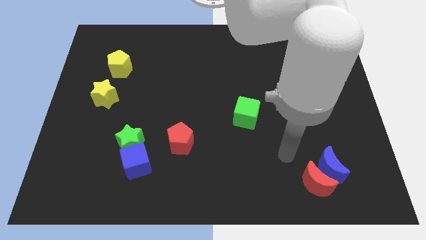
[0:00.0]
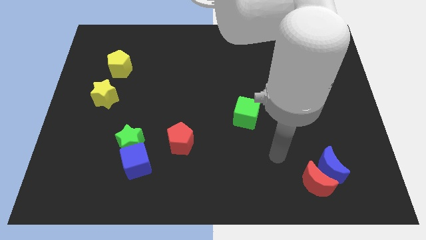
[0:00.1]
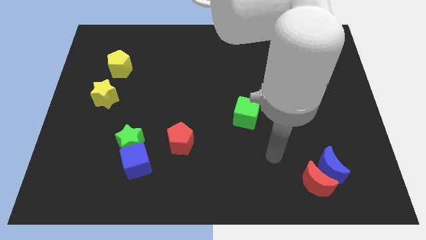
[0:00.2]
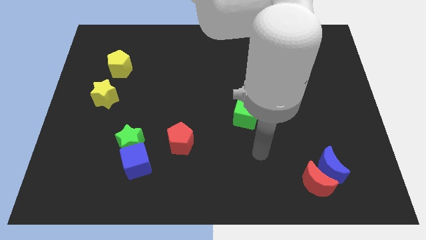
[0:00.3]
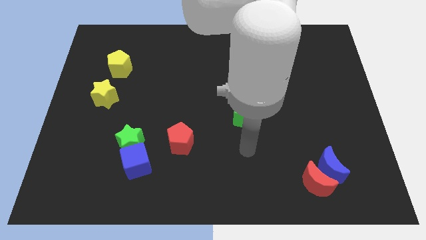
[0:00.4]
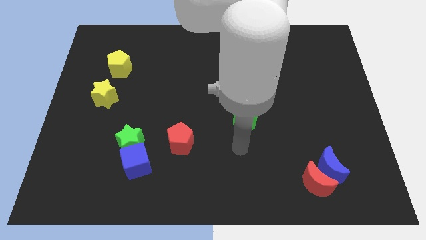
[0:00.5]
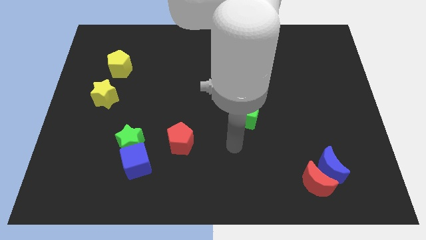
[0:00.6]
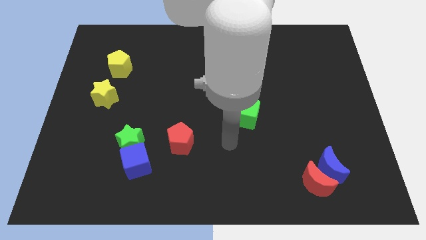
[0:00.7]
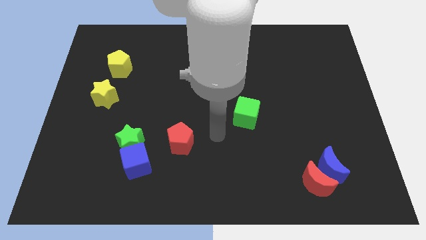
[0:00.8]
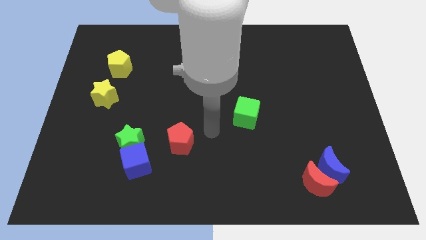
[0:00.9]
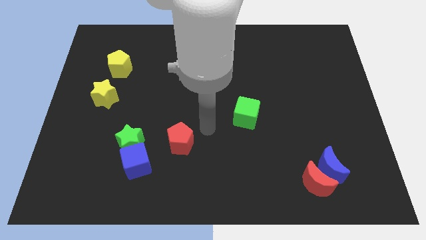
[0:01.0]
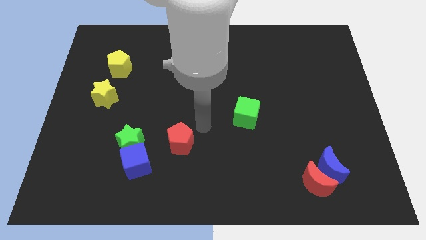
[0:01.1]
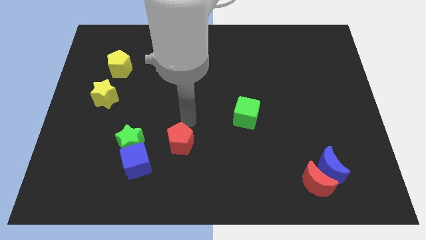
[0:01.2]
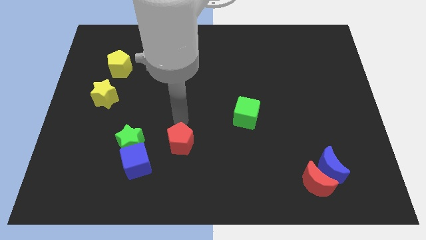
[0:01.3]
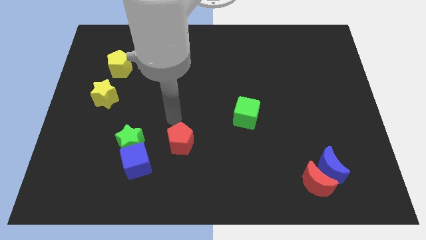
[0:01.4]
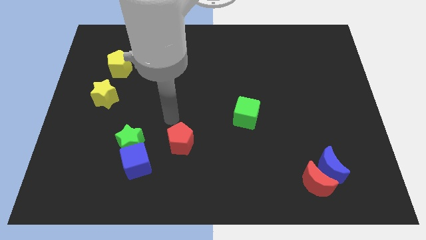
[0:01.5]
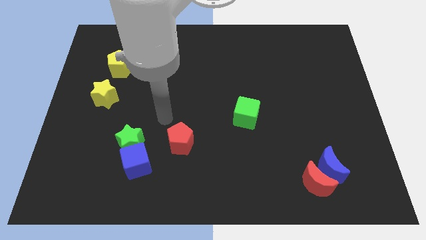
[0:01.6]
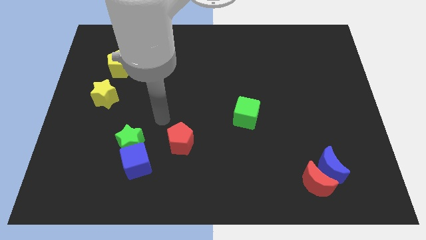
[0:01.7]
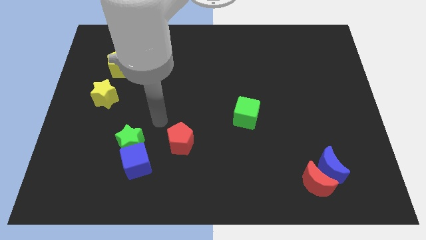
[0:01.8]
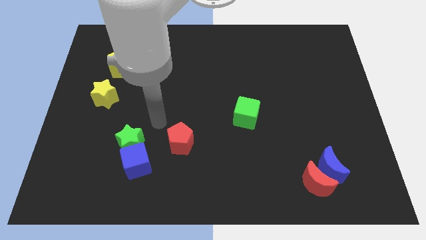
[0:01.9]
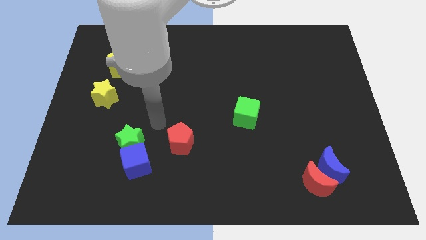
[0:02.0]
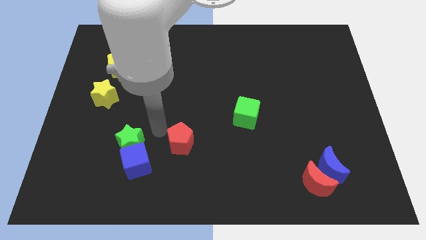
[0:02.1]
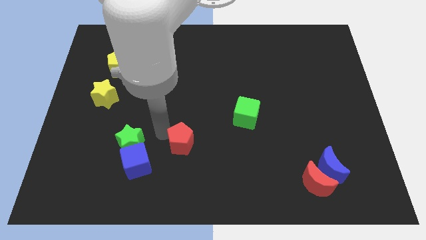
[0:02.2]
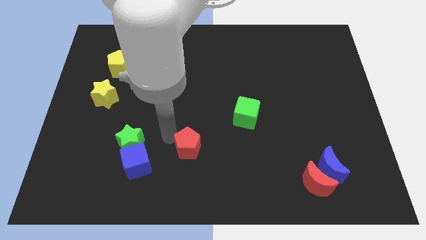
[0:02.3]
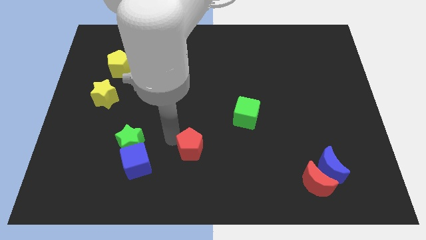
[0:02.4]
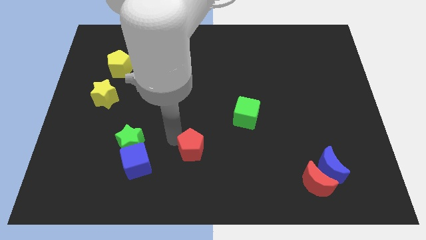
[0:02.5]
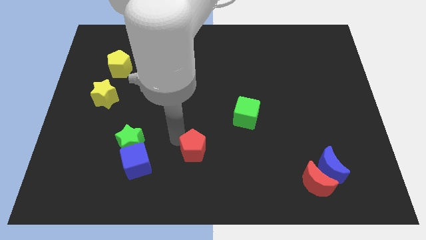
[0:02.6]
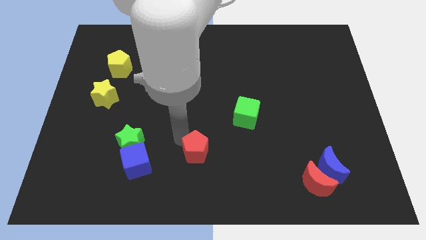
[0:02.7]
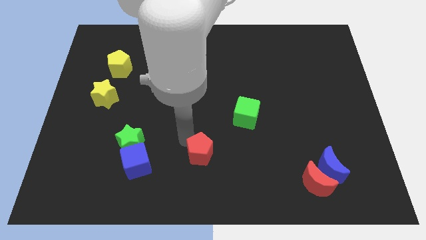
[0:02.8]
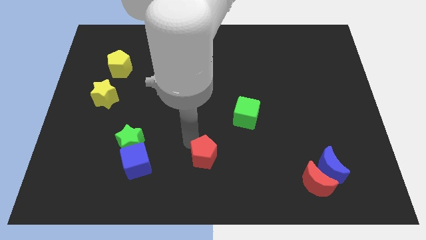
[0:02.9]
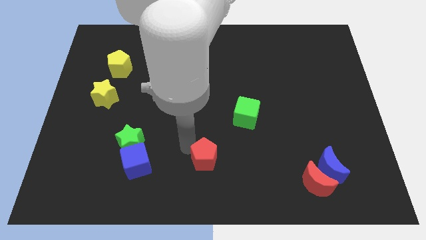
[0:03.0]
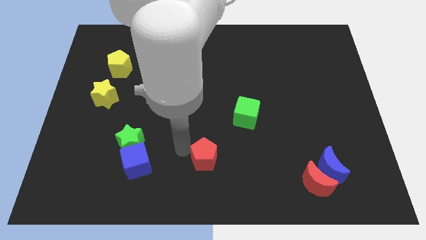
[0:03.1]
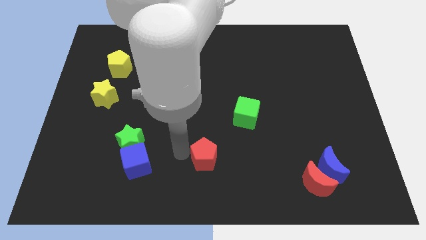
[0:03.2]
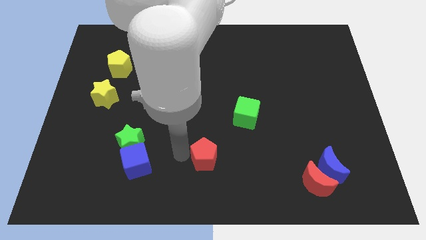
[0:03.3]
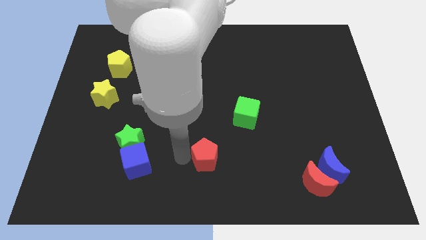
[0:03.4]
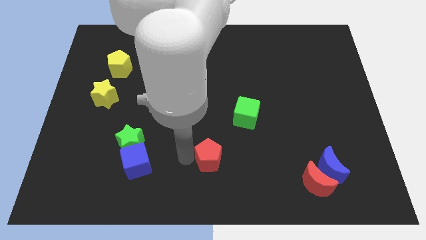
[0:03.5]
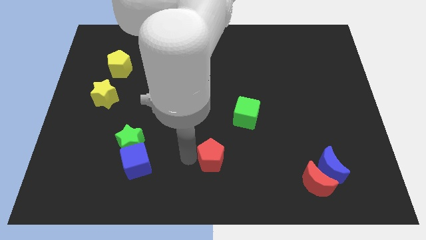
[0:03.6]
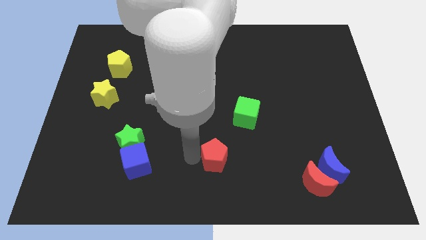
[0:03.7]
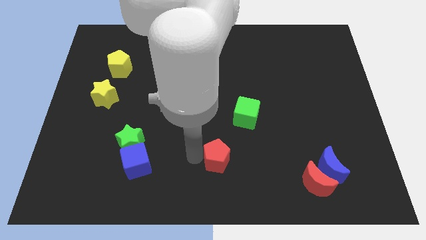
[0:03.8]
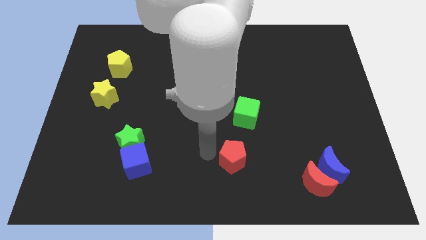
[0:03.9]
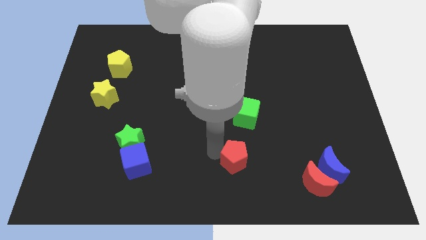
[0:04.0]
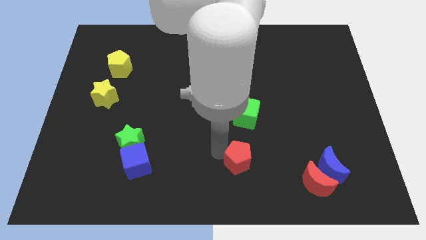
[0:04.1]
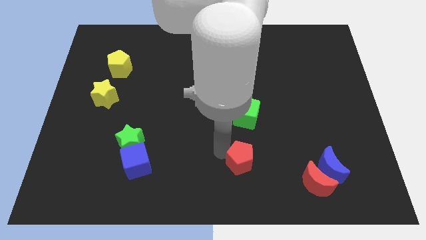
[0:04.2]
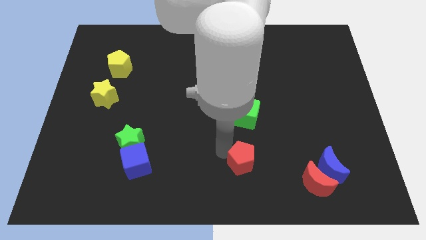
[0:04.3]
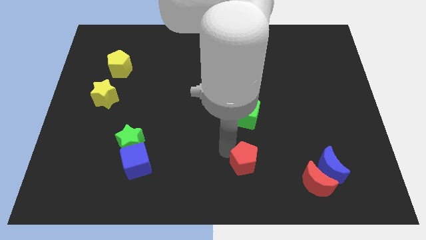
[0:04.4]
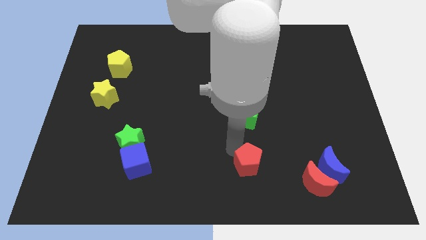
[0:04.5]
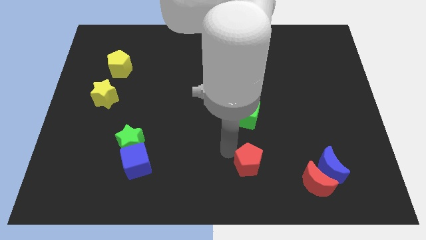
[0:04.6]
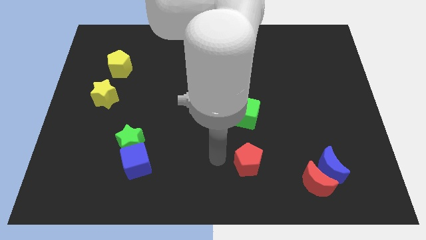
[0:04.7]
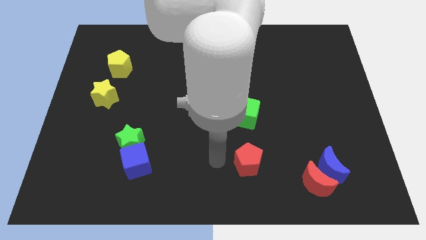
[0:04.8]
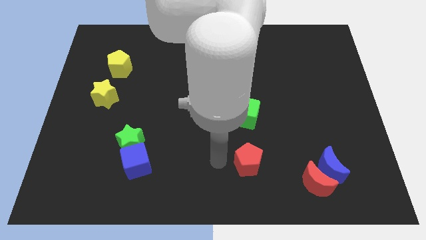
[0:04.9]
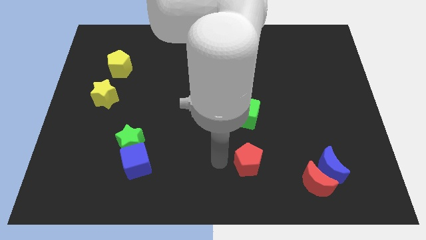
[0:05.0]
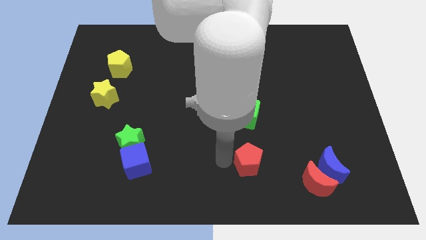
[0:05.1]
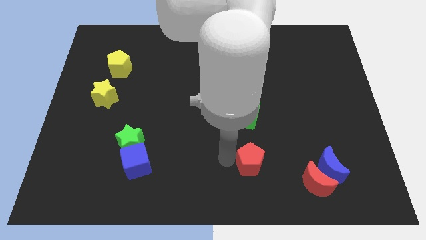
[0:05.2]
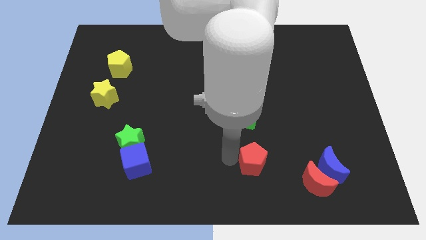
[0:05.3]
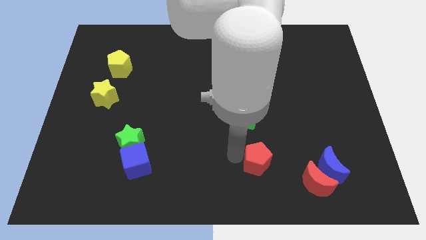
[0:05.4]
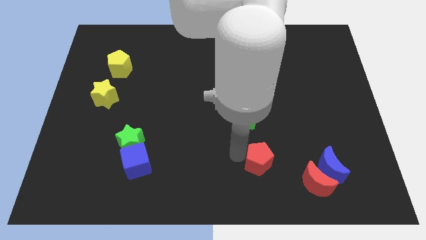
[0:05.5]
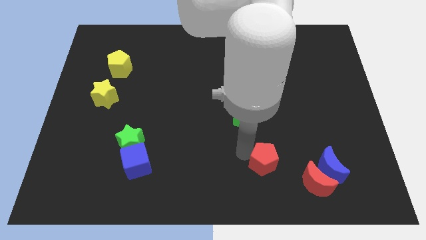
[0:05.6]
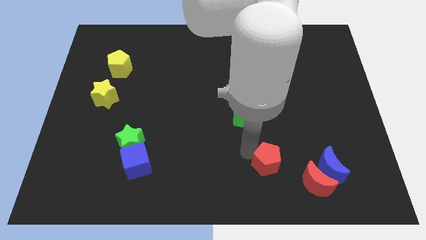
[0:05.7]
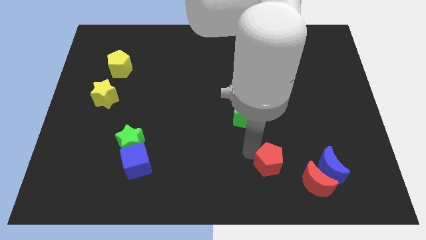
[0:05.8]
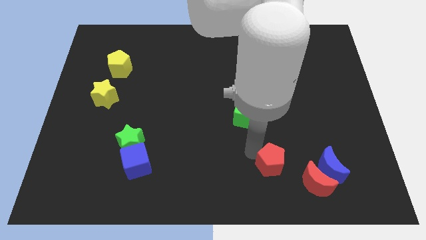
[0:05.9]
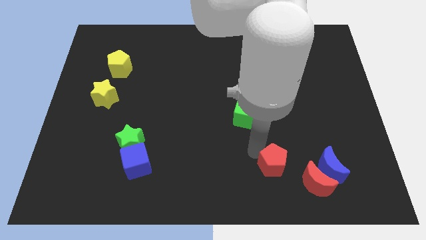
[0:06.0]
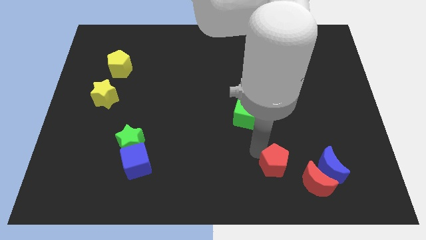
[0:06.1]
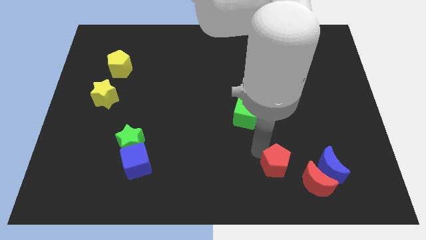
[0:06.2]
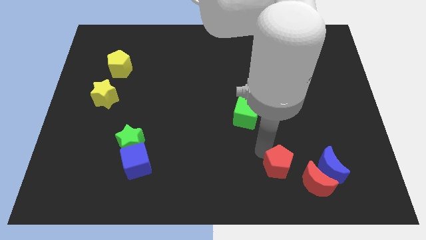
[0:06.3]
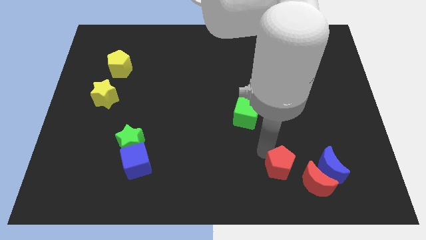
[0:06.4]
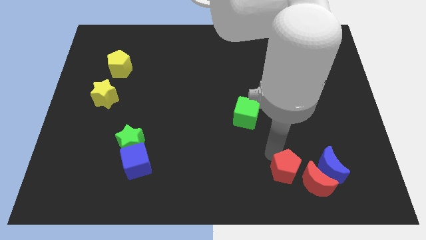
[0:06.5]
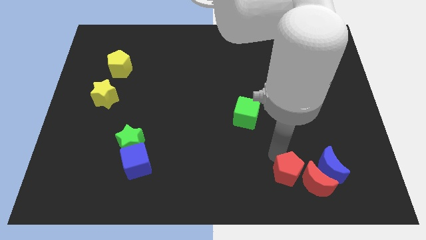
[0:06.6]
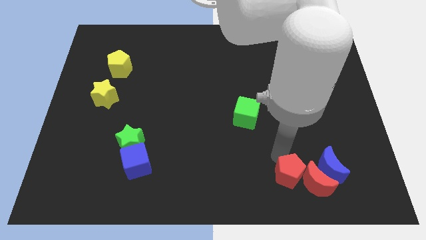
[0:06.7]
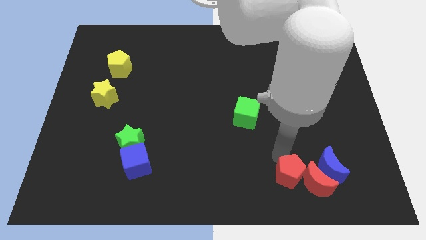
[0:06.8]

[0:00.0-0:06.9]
slide the red pentagon next to the red moon
